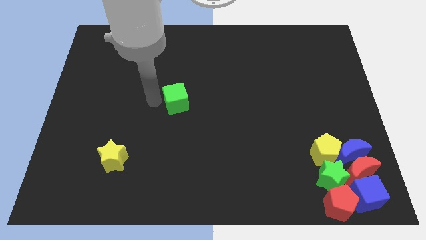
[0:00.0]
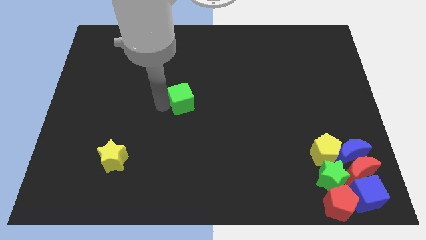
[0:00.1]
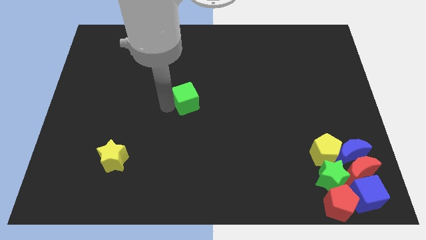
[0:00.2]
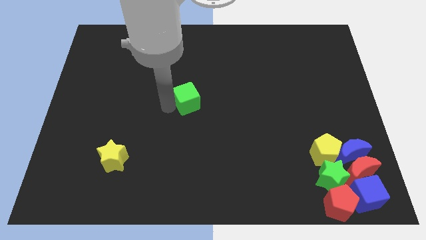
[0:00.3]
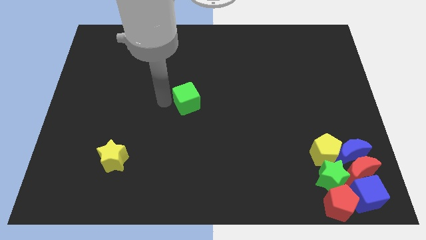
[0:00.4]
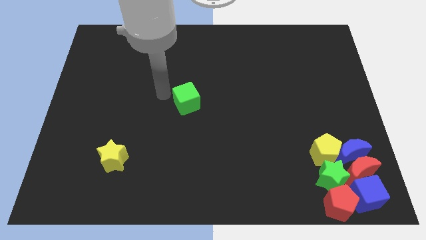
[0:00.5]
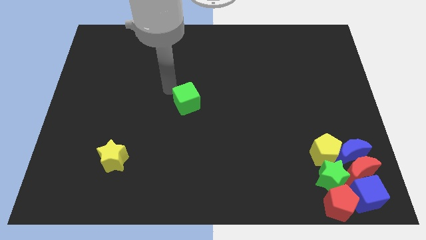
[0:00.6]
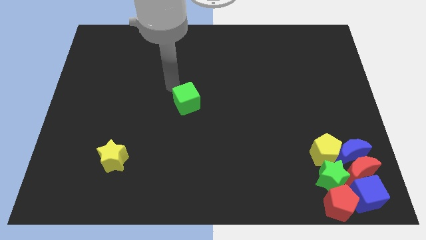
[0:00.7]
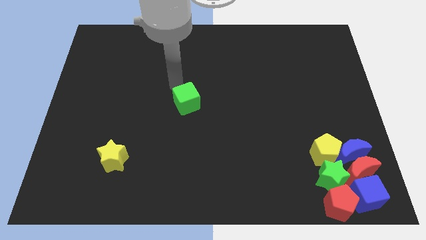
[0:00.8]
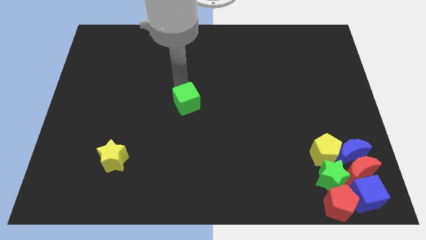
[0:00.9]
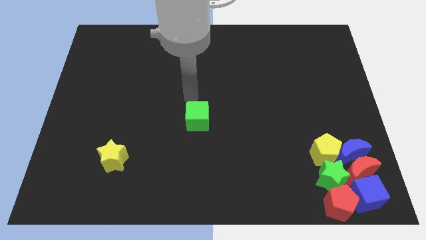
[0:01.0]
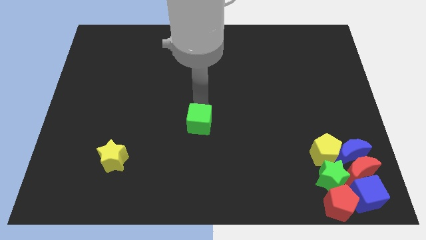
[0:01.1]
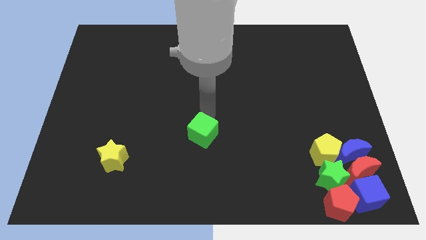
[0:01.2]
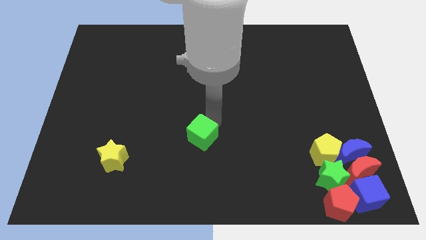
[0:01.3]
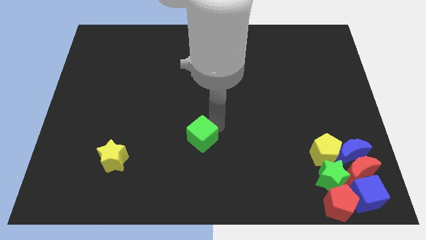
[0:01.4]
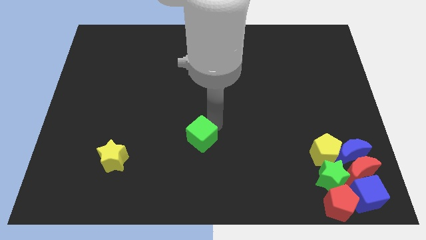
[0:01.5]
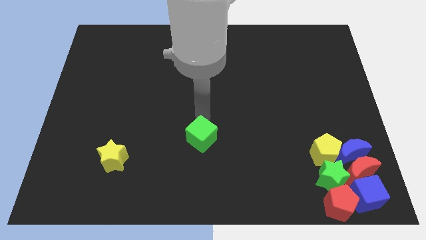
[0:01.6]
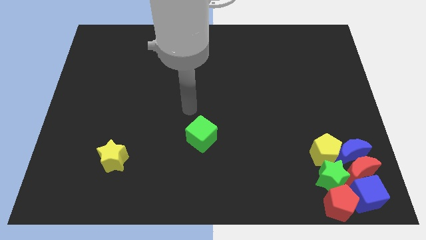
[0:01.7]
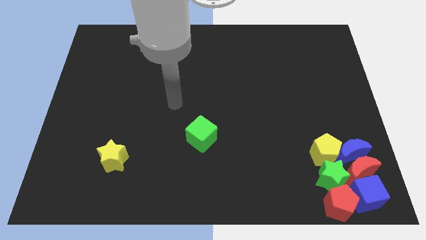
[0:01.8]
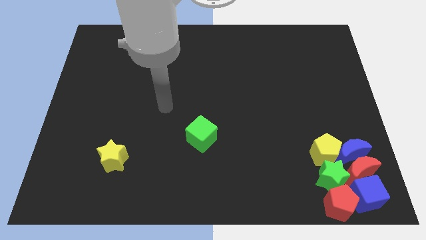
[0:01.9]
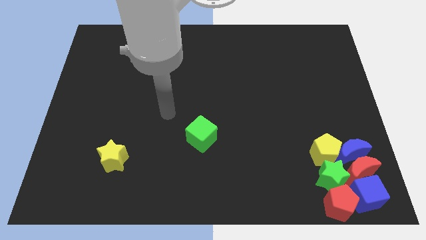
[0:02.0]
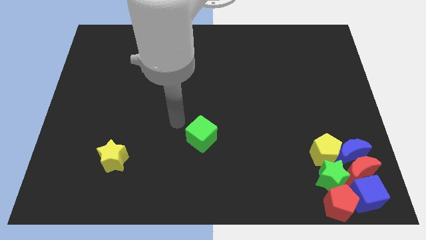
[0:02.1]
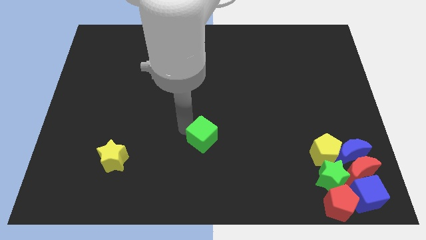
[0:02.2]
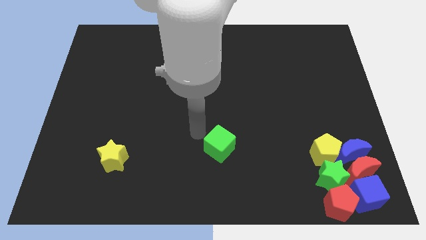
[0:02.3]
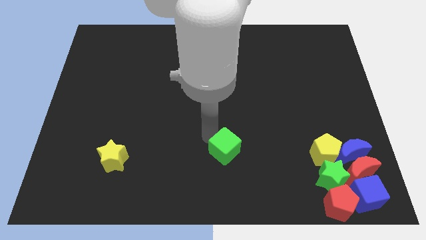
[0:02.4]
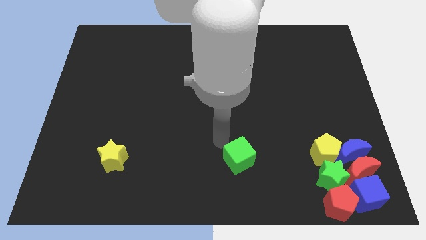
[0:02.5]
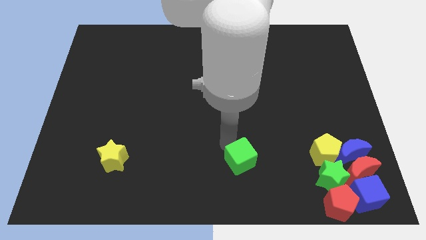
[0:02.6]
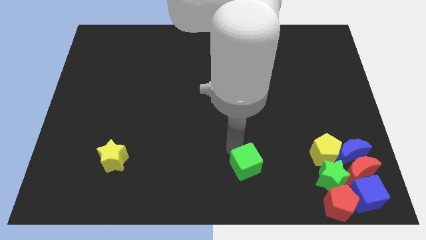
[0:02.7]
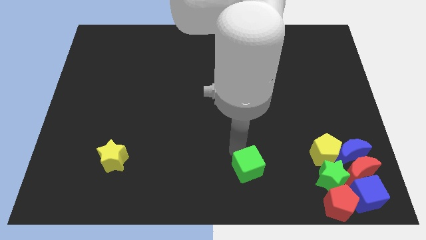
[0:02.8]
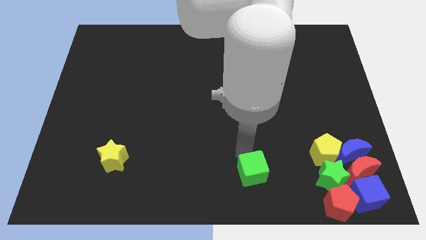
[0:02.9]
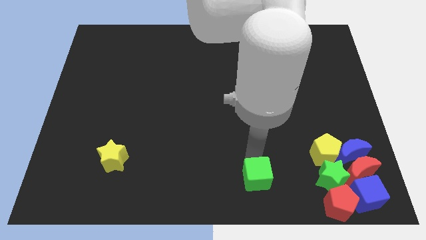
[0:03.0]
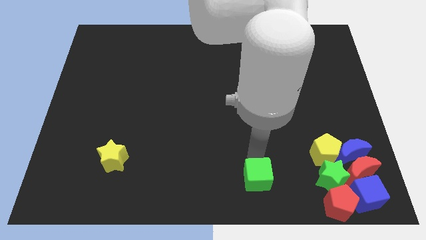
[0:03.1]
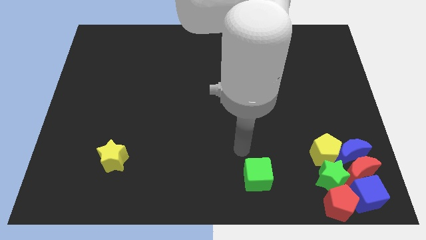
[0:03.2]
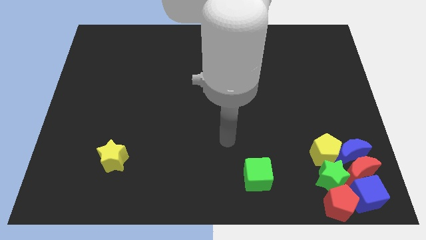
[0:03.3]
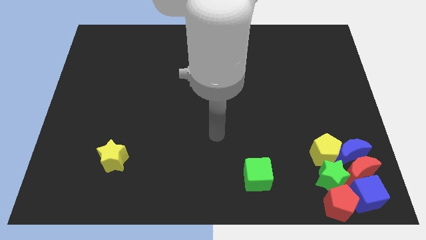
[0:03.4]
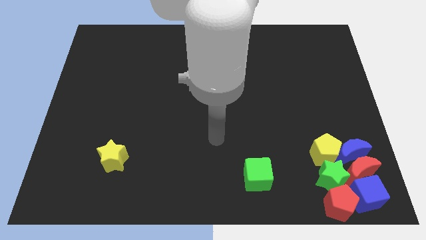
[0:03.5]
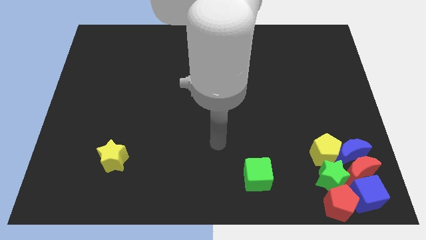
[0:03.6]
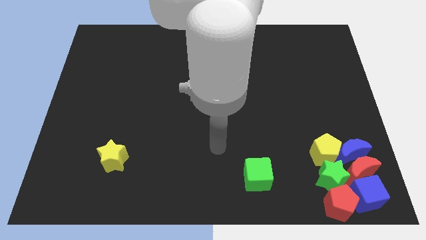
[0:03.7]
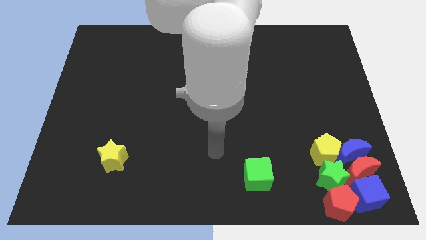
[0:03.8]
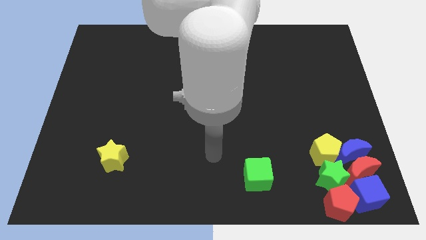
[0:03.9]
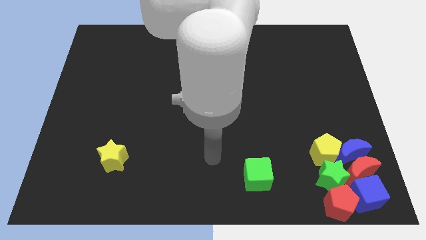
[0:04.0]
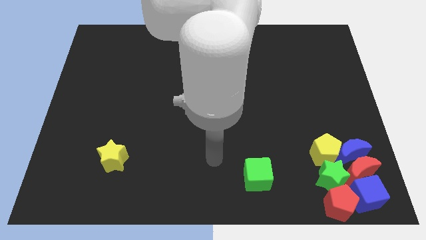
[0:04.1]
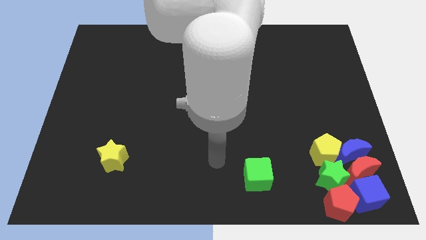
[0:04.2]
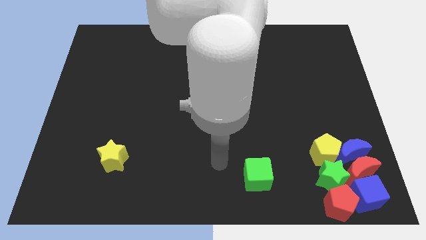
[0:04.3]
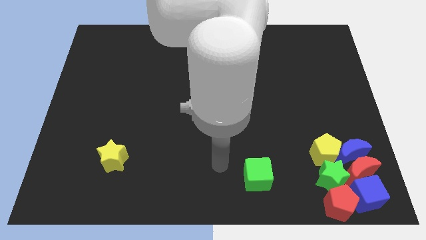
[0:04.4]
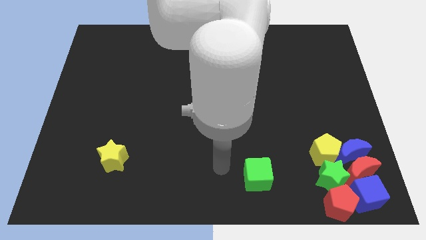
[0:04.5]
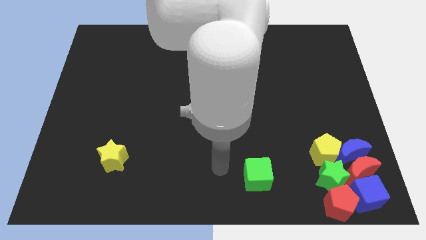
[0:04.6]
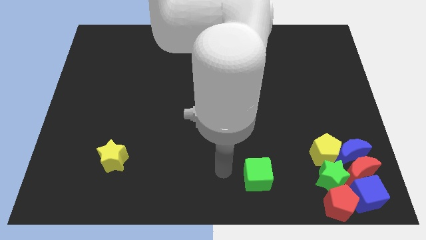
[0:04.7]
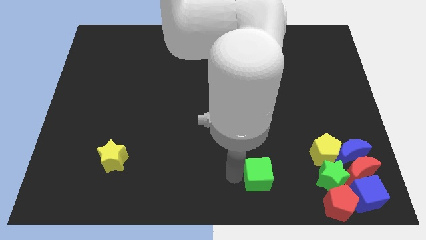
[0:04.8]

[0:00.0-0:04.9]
place the green cube to the left of the green star

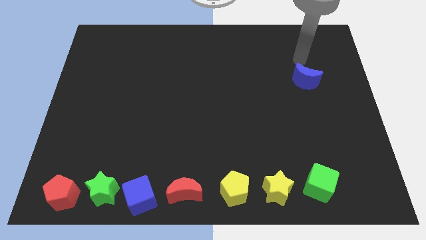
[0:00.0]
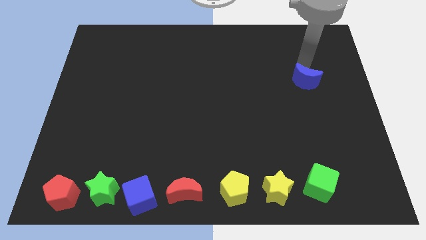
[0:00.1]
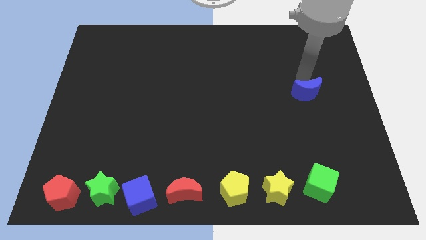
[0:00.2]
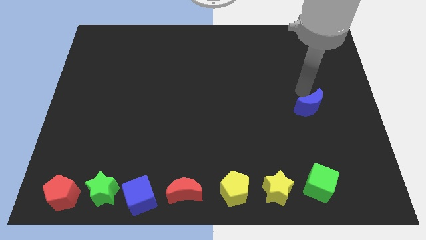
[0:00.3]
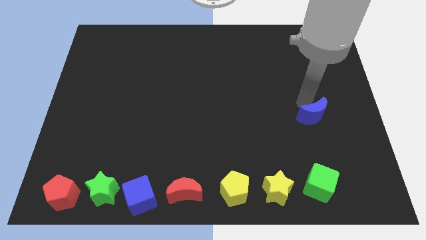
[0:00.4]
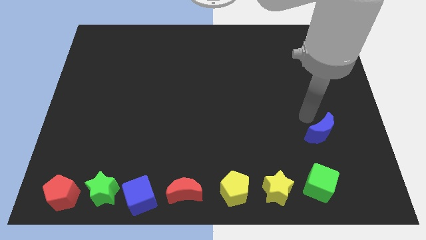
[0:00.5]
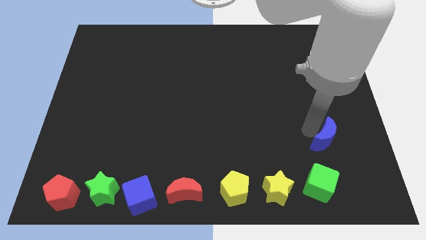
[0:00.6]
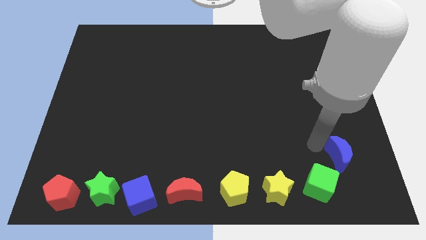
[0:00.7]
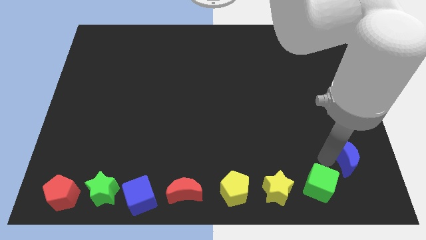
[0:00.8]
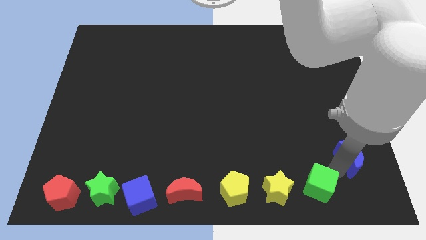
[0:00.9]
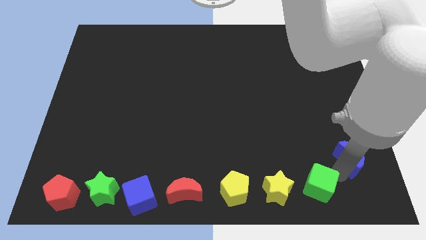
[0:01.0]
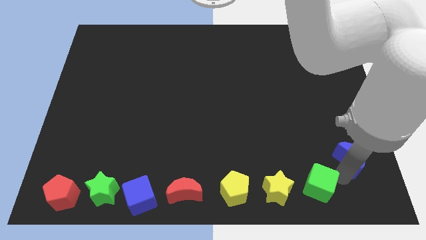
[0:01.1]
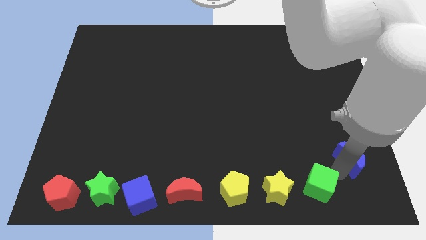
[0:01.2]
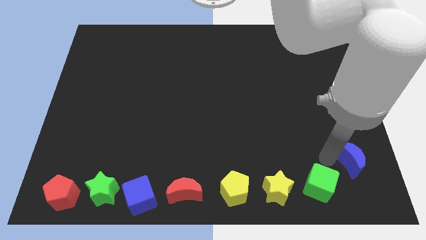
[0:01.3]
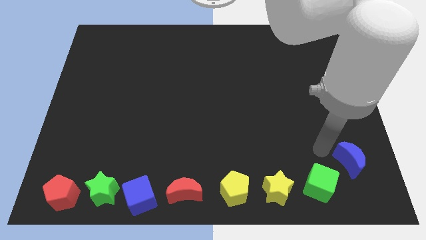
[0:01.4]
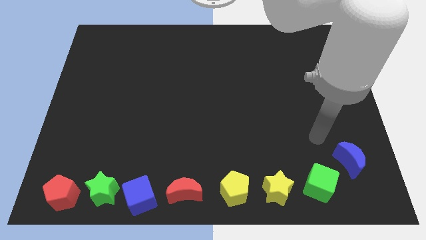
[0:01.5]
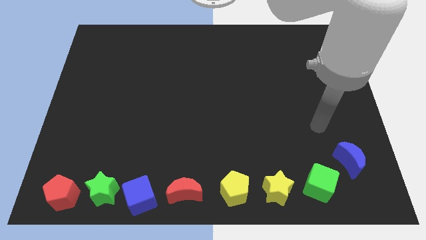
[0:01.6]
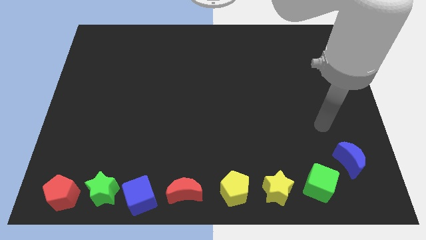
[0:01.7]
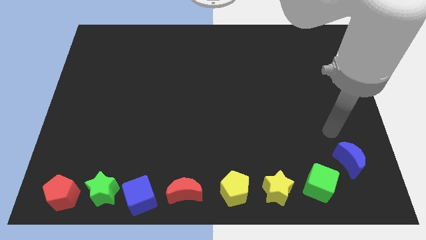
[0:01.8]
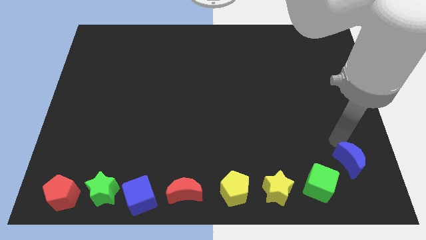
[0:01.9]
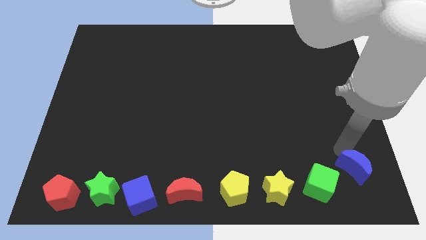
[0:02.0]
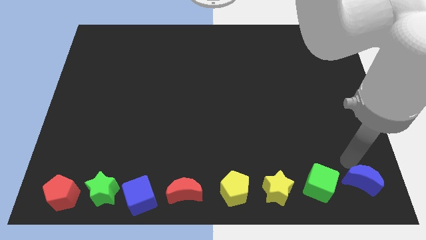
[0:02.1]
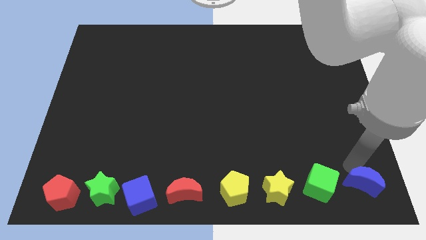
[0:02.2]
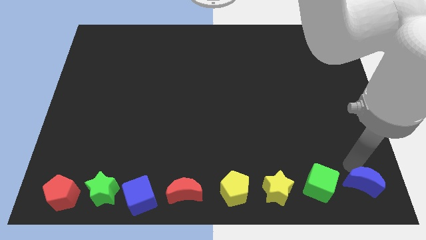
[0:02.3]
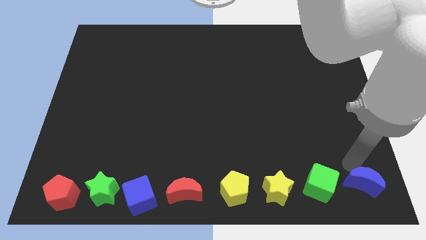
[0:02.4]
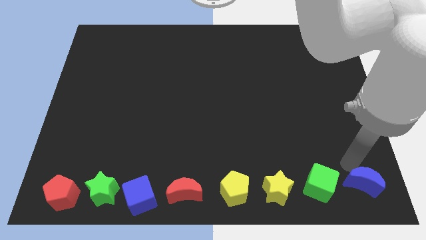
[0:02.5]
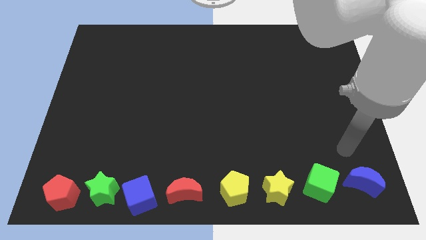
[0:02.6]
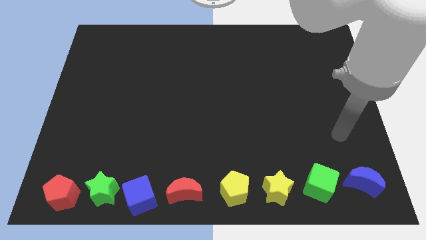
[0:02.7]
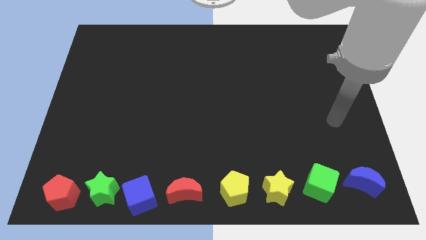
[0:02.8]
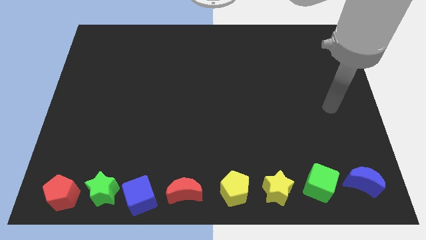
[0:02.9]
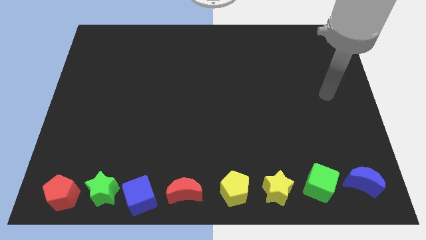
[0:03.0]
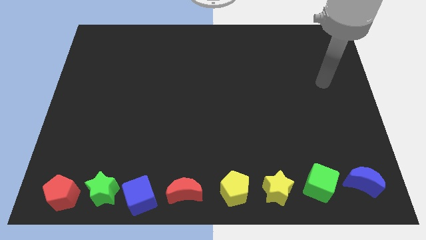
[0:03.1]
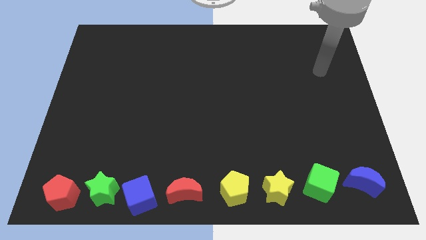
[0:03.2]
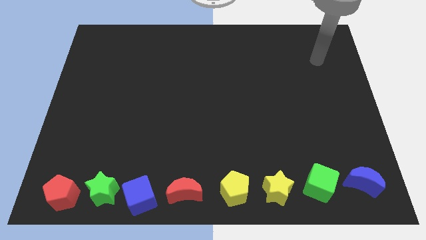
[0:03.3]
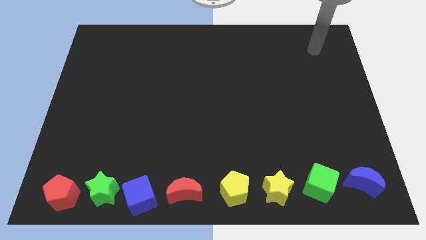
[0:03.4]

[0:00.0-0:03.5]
move the blue crescent to the right bottom corner of the board

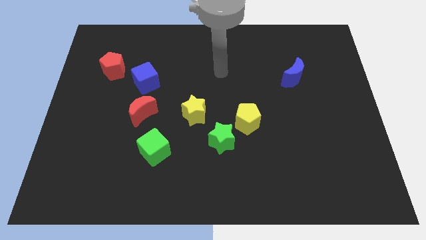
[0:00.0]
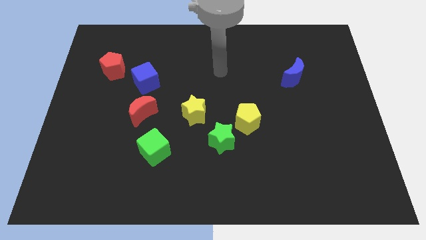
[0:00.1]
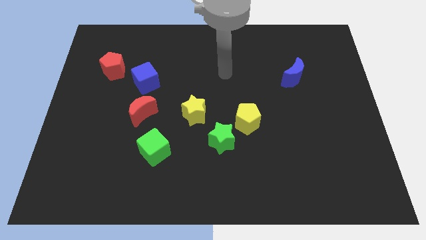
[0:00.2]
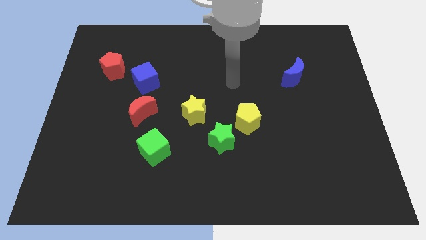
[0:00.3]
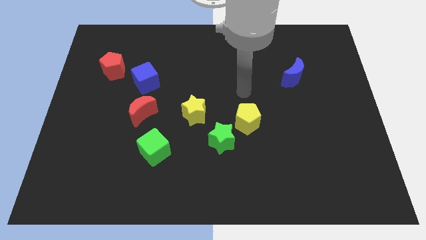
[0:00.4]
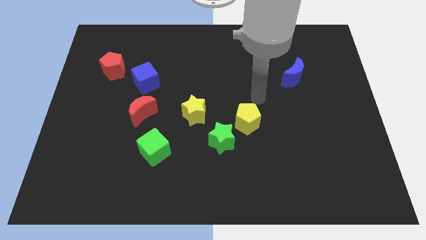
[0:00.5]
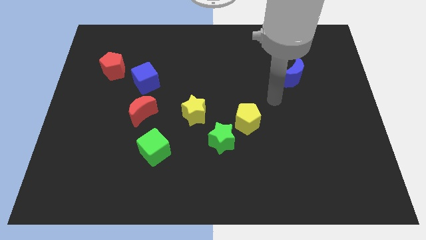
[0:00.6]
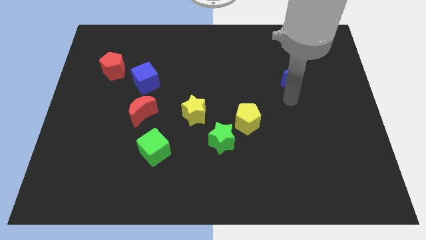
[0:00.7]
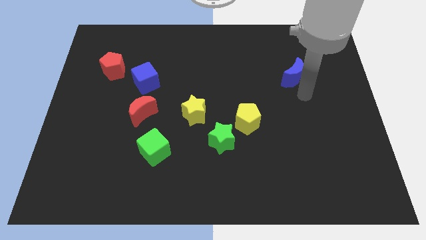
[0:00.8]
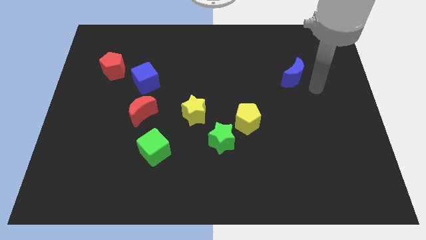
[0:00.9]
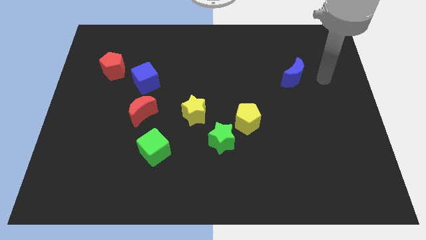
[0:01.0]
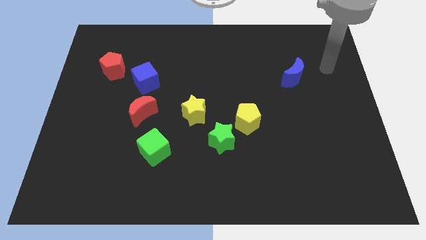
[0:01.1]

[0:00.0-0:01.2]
point your arm to the right side of blue moon
